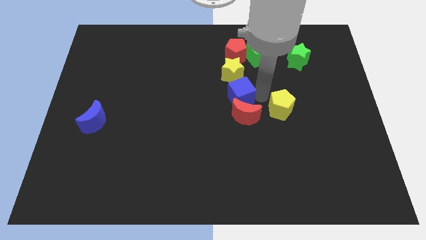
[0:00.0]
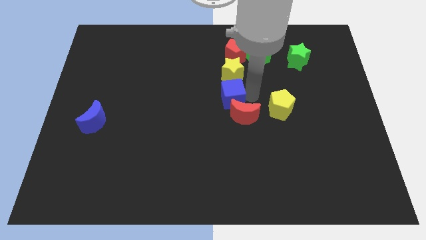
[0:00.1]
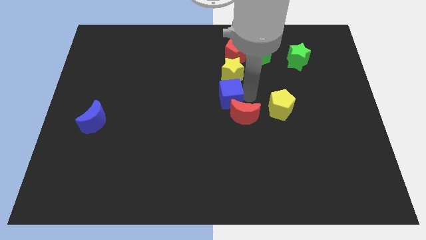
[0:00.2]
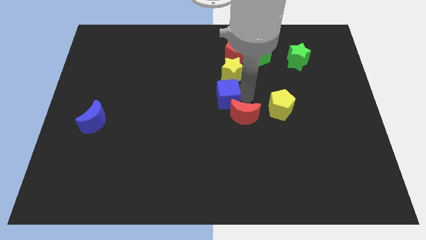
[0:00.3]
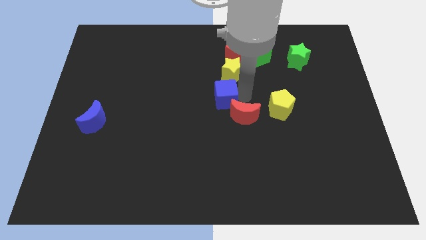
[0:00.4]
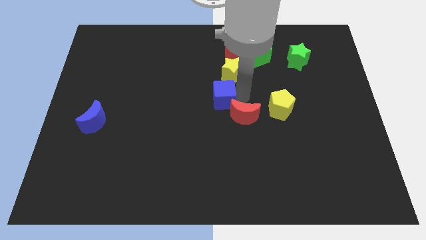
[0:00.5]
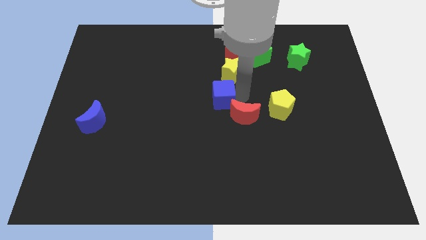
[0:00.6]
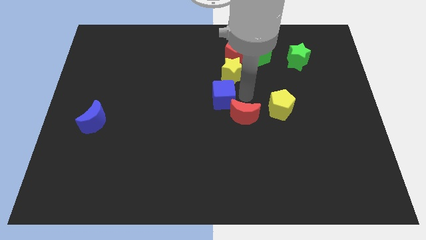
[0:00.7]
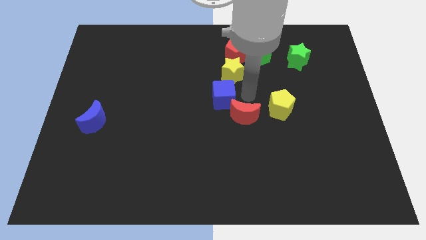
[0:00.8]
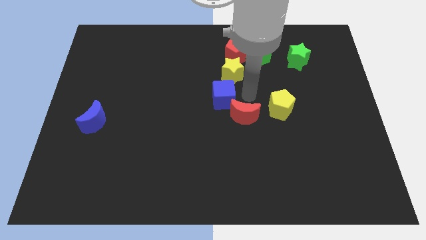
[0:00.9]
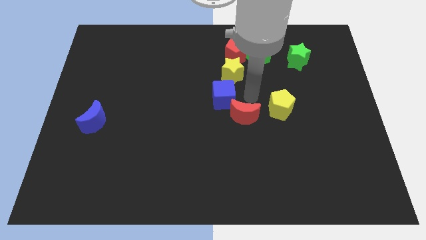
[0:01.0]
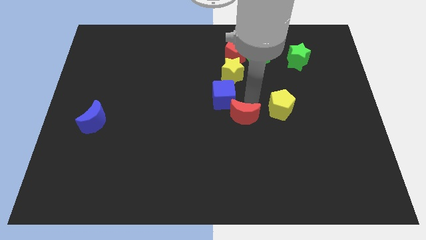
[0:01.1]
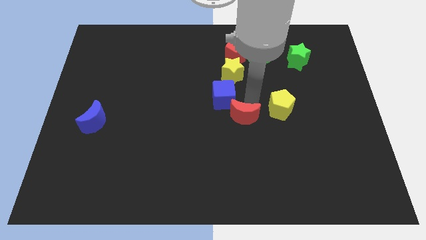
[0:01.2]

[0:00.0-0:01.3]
push the blue cube slightly to the left

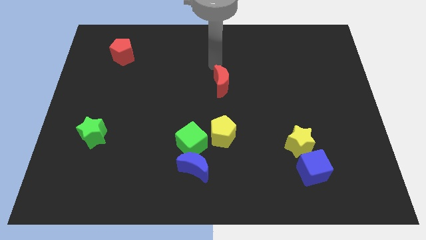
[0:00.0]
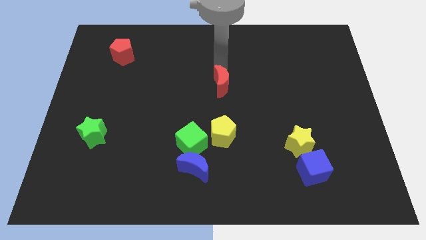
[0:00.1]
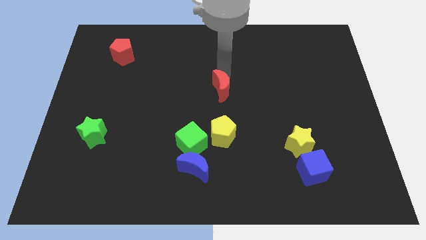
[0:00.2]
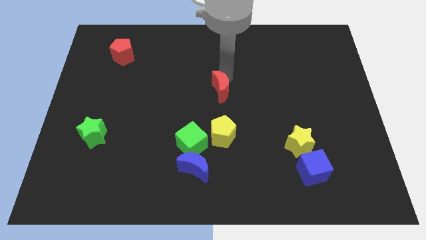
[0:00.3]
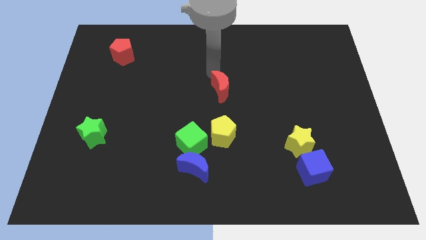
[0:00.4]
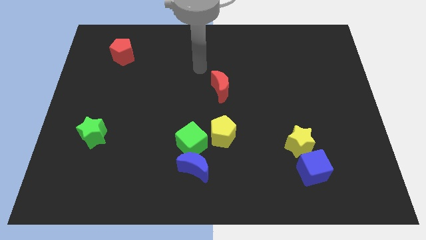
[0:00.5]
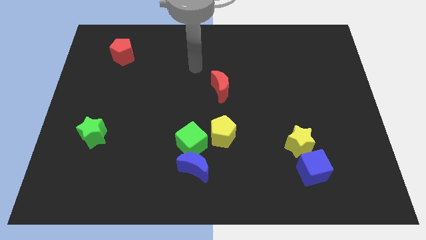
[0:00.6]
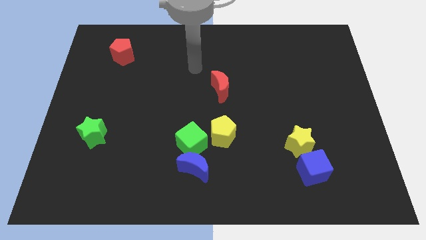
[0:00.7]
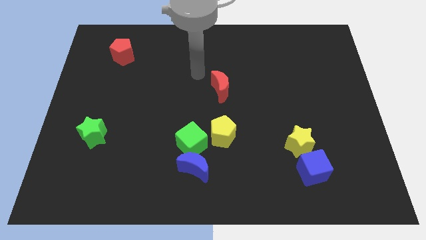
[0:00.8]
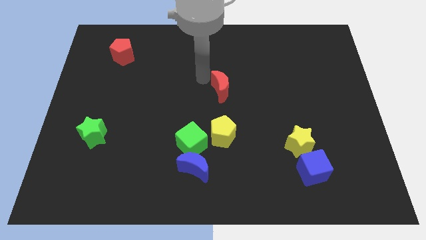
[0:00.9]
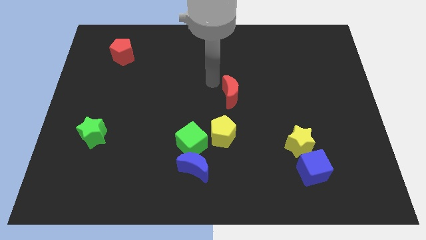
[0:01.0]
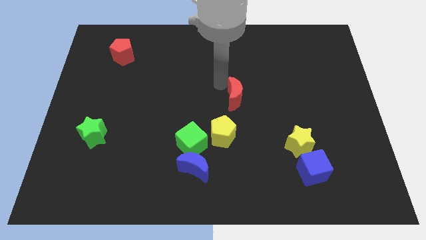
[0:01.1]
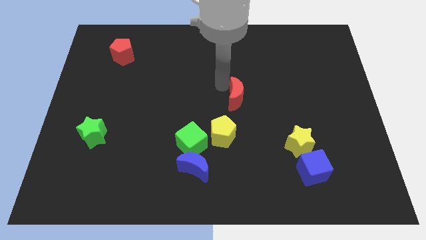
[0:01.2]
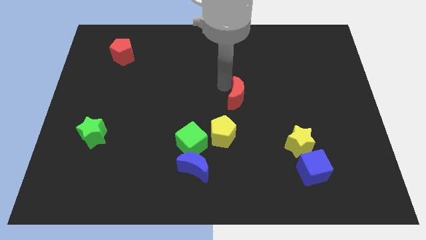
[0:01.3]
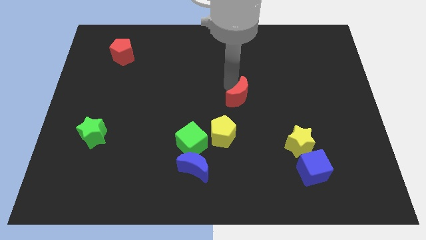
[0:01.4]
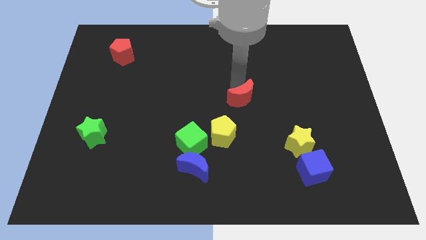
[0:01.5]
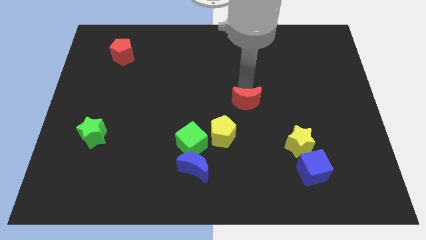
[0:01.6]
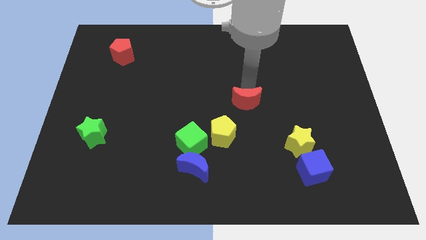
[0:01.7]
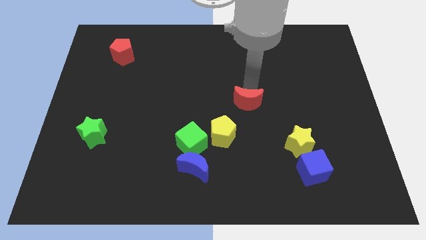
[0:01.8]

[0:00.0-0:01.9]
push the red crescent slightly to the right

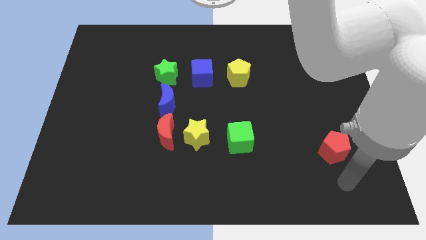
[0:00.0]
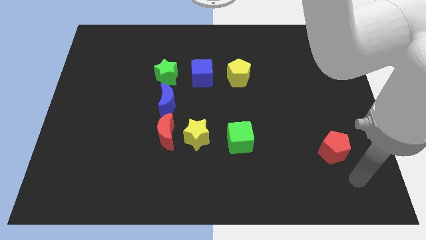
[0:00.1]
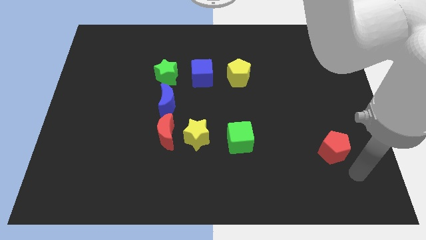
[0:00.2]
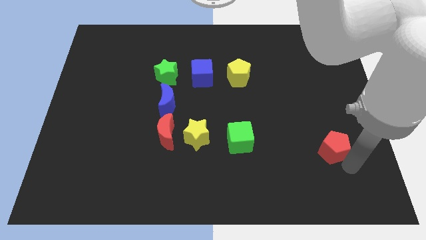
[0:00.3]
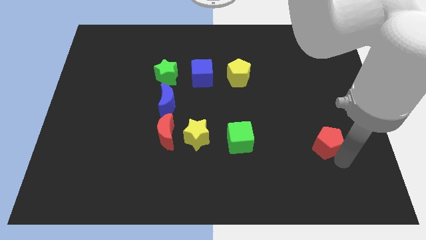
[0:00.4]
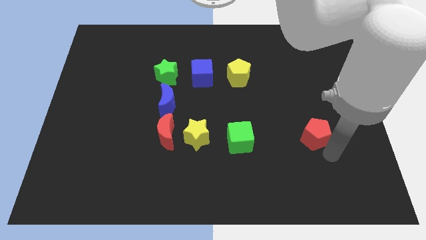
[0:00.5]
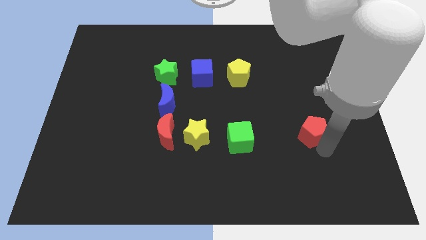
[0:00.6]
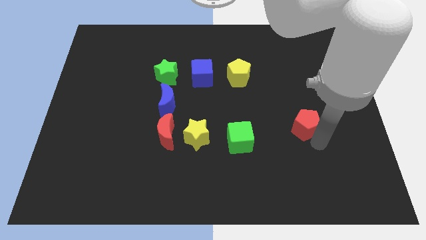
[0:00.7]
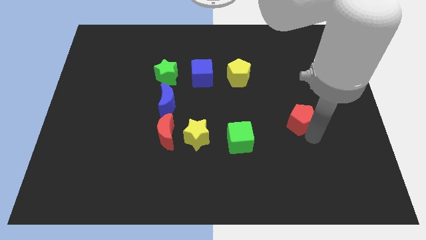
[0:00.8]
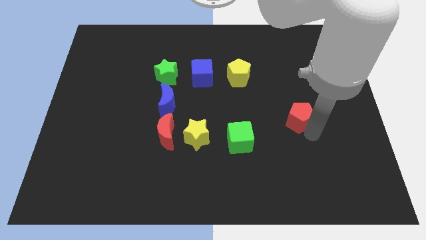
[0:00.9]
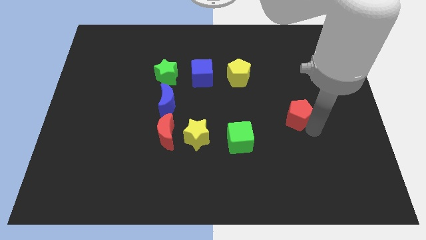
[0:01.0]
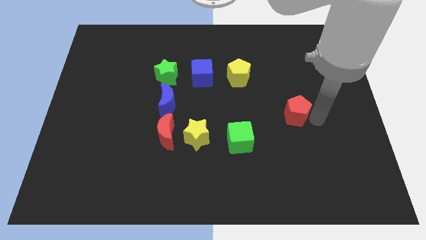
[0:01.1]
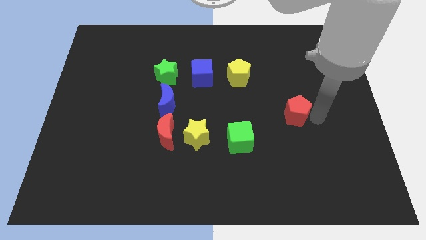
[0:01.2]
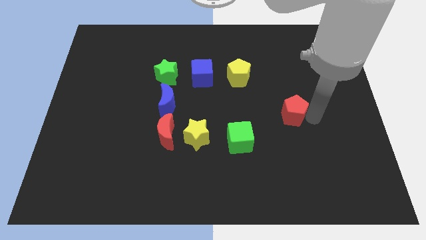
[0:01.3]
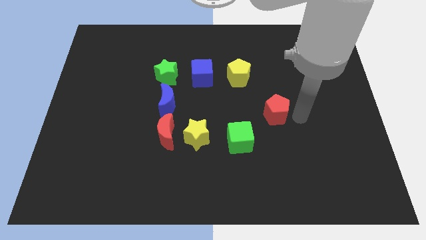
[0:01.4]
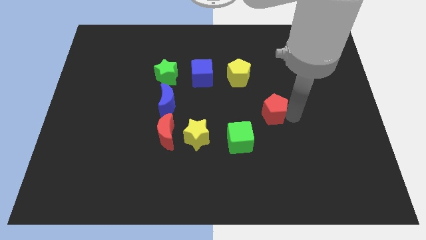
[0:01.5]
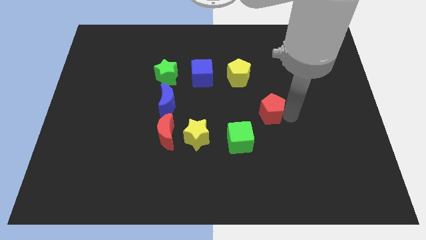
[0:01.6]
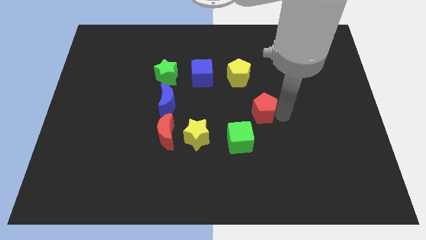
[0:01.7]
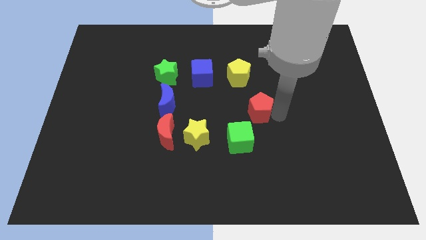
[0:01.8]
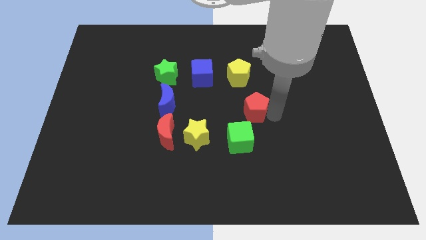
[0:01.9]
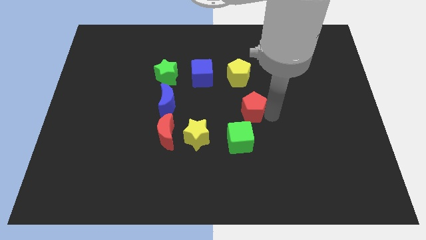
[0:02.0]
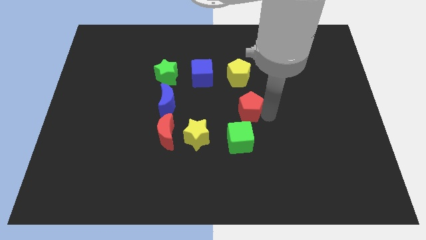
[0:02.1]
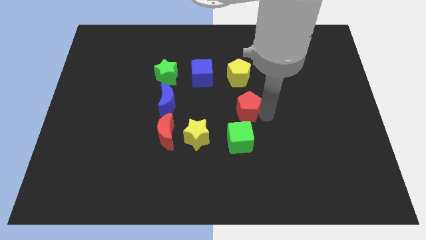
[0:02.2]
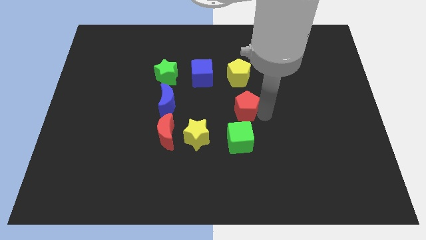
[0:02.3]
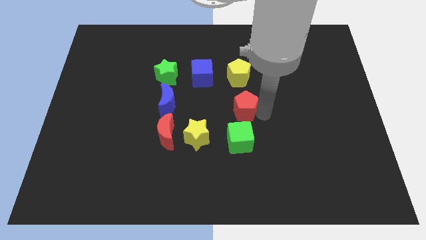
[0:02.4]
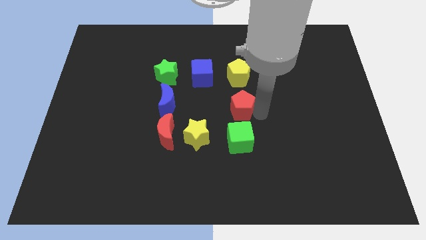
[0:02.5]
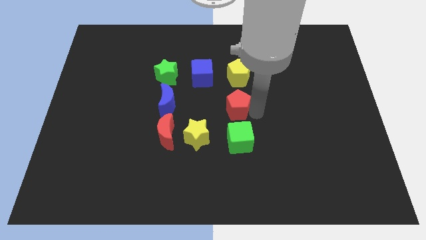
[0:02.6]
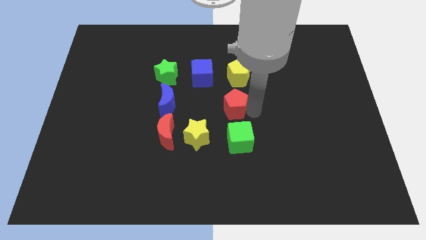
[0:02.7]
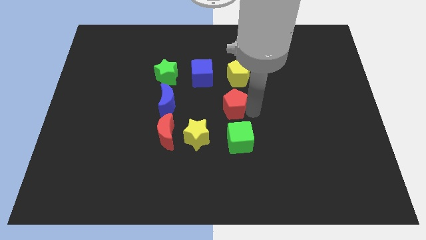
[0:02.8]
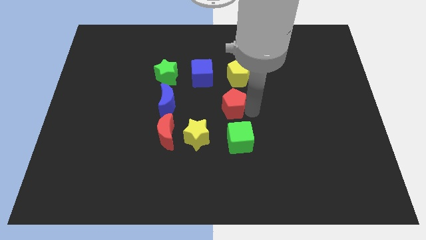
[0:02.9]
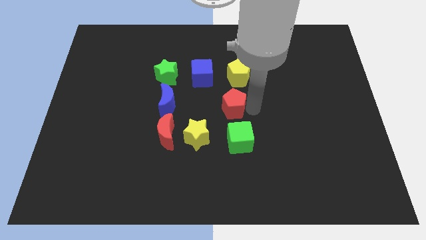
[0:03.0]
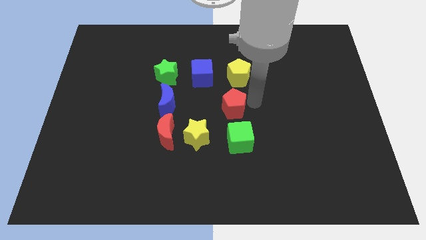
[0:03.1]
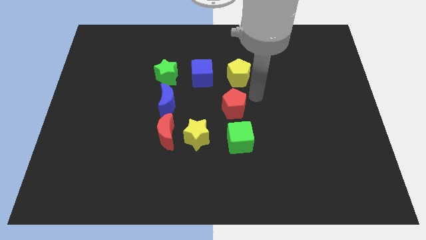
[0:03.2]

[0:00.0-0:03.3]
move the red pentagon to top of the green cube

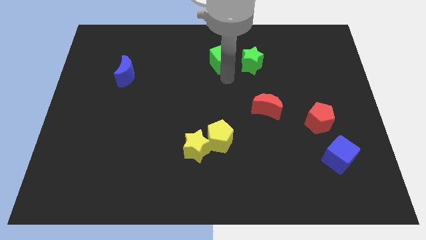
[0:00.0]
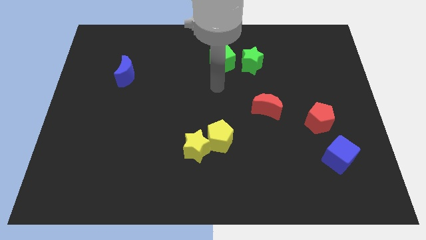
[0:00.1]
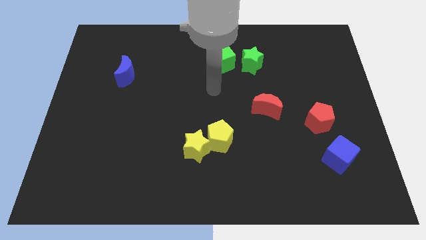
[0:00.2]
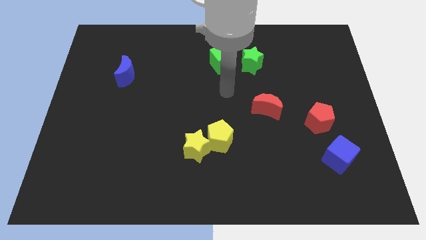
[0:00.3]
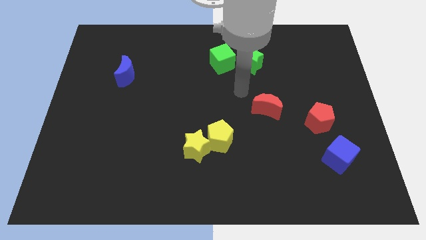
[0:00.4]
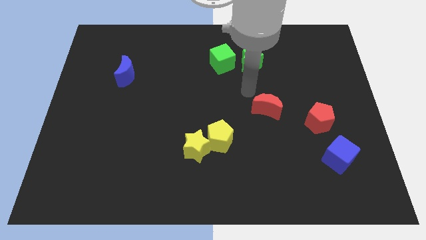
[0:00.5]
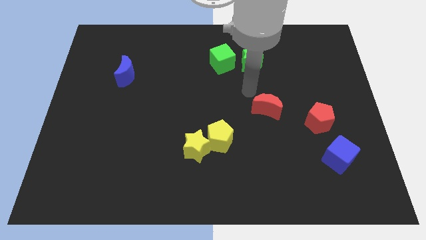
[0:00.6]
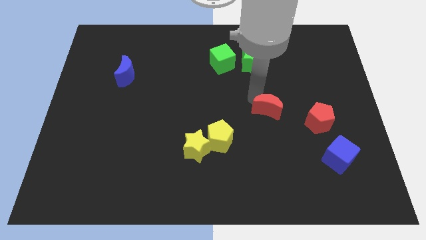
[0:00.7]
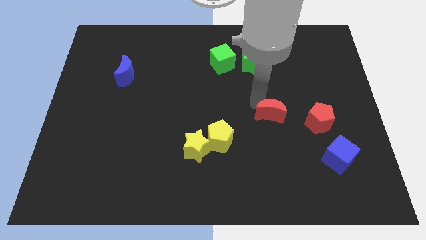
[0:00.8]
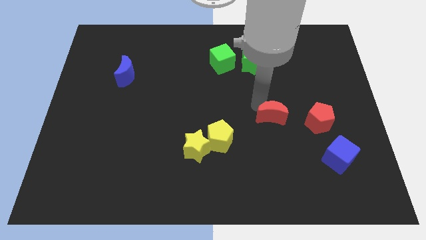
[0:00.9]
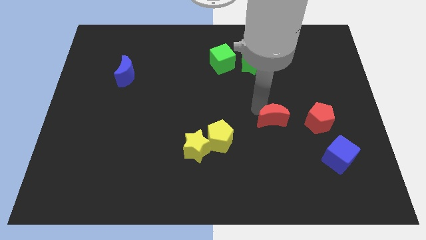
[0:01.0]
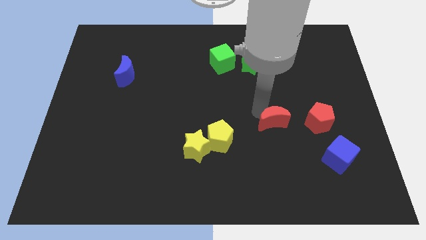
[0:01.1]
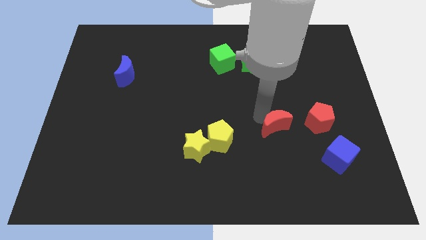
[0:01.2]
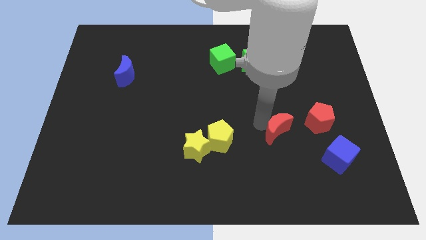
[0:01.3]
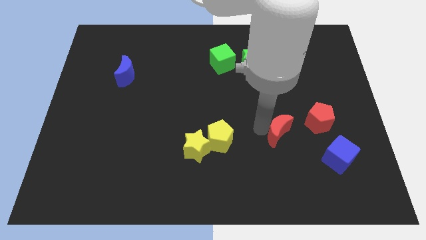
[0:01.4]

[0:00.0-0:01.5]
place red moon to the left of red pentagon

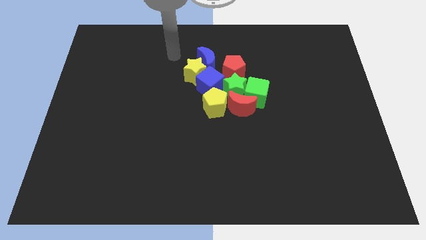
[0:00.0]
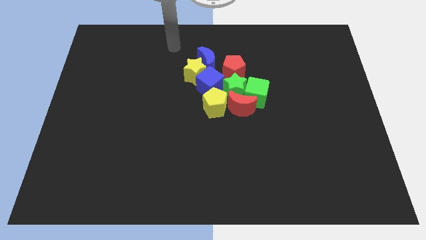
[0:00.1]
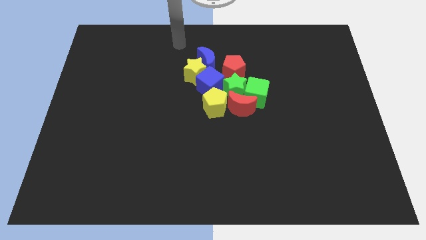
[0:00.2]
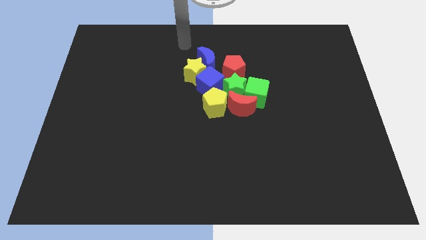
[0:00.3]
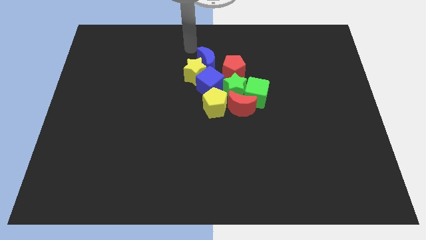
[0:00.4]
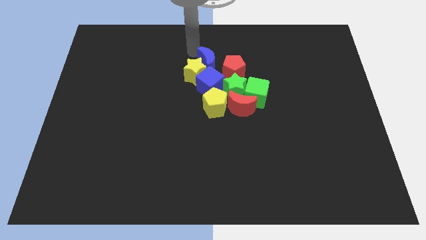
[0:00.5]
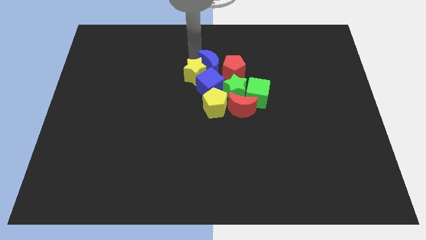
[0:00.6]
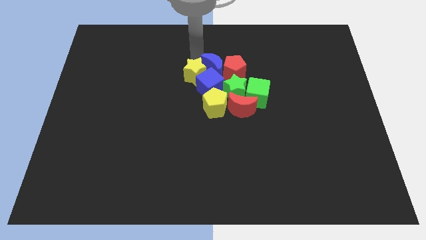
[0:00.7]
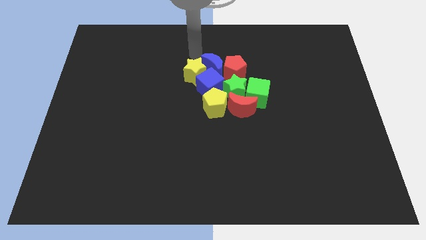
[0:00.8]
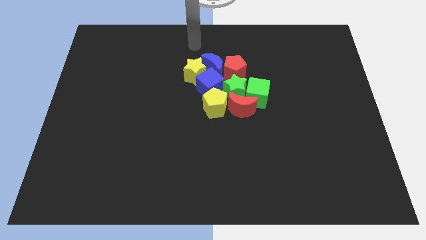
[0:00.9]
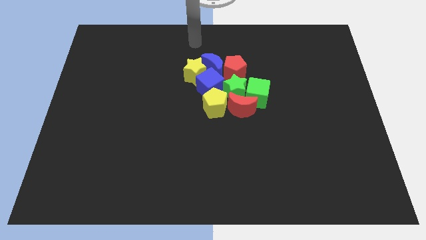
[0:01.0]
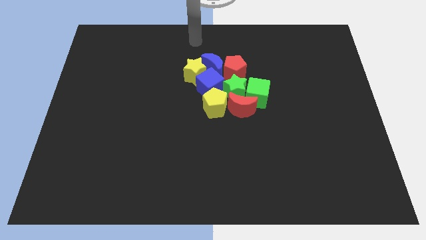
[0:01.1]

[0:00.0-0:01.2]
group up all the blocks
